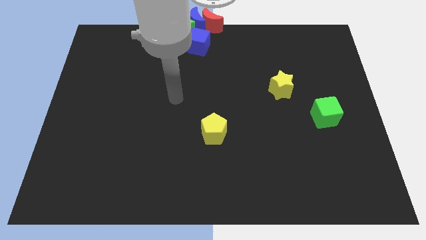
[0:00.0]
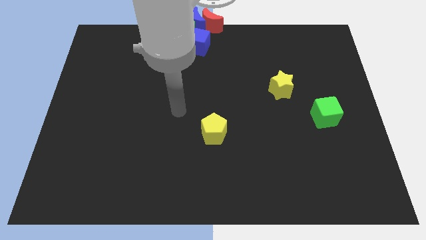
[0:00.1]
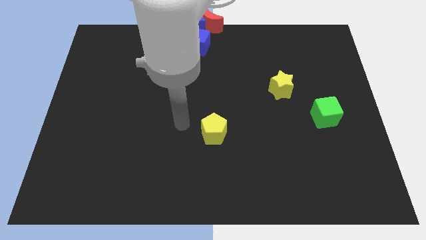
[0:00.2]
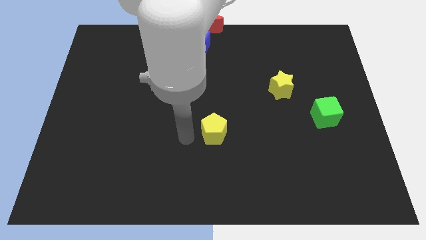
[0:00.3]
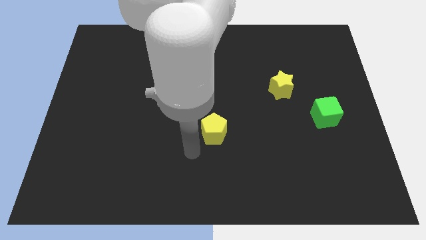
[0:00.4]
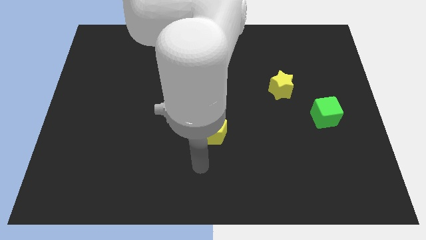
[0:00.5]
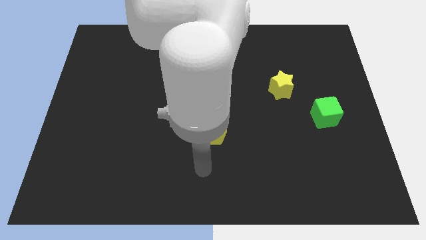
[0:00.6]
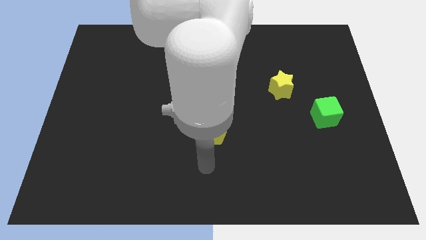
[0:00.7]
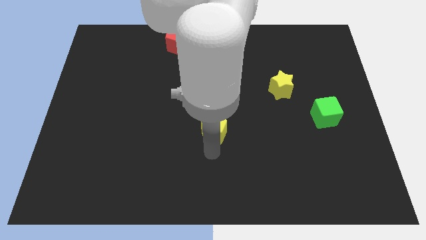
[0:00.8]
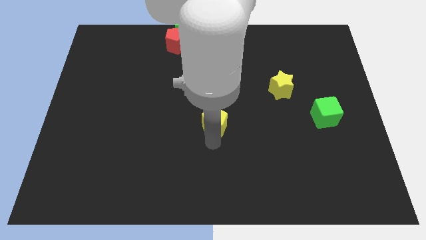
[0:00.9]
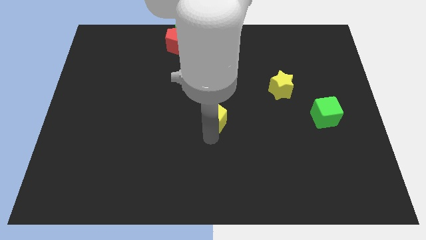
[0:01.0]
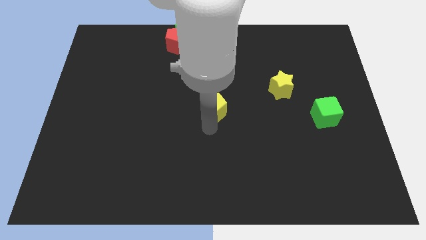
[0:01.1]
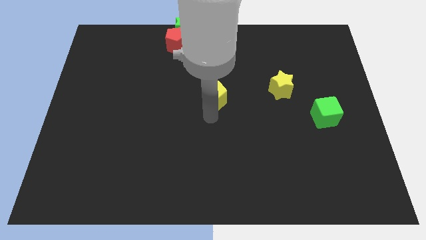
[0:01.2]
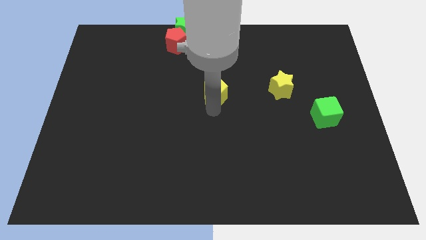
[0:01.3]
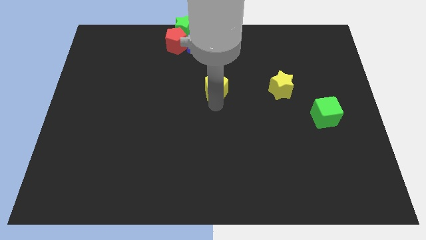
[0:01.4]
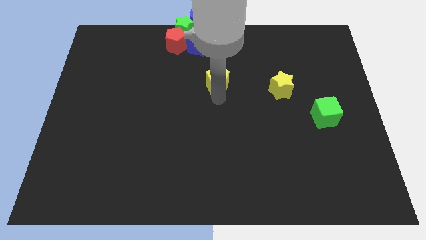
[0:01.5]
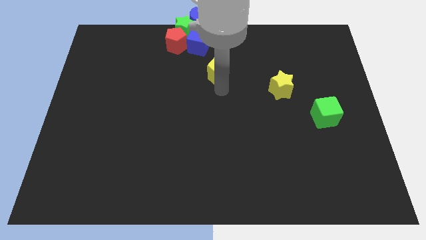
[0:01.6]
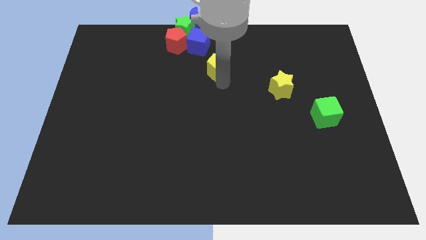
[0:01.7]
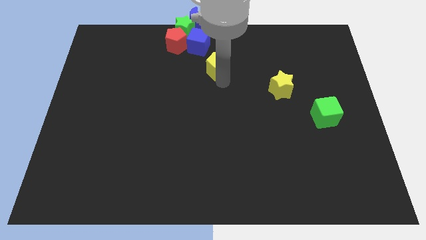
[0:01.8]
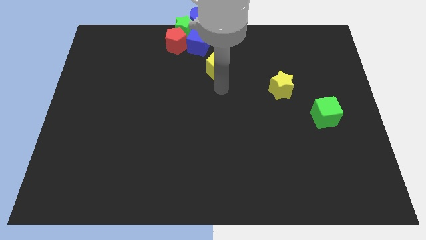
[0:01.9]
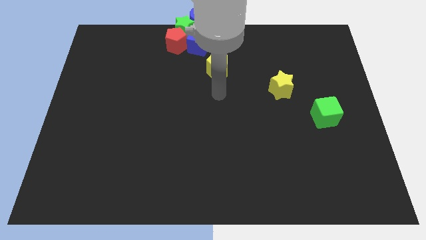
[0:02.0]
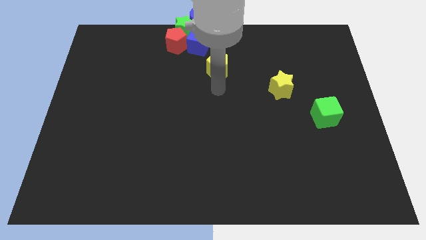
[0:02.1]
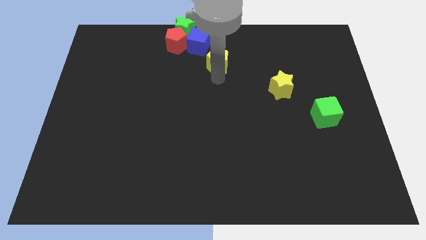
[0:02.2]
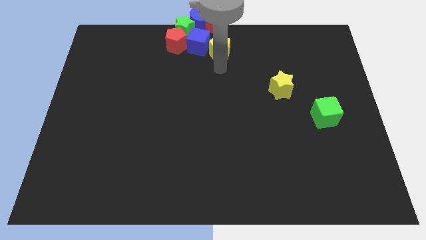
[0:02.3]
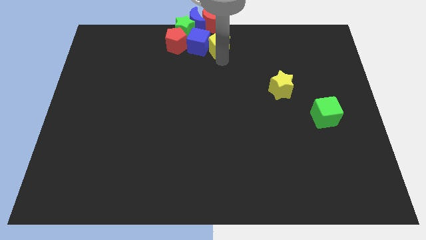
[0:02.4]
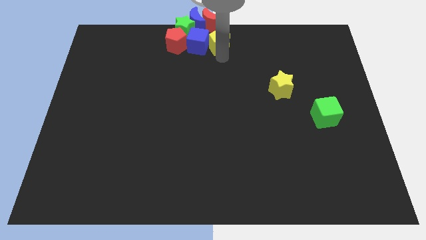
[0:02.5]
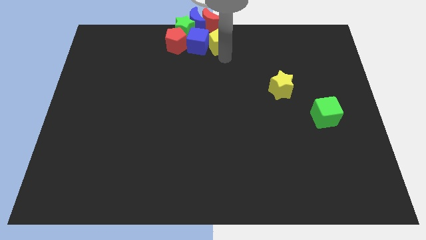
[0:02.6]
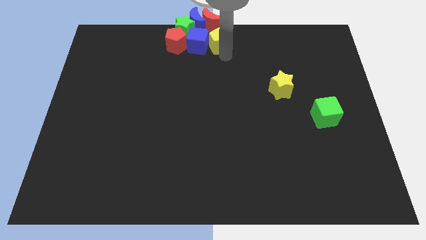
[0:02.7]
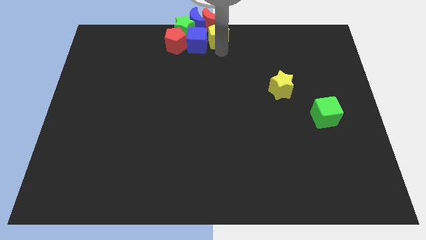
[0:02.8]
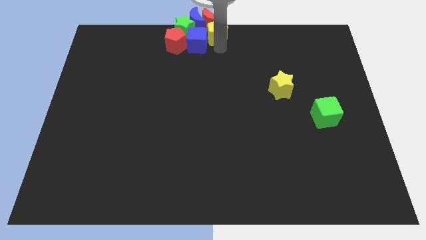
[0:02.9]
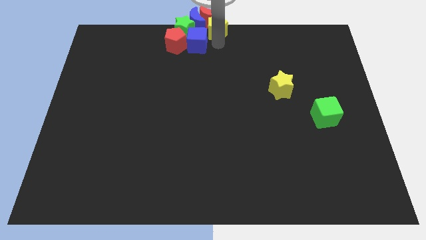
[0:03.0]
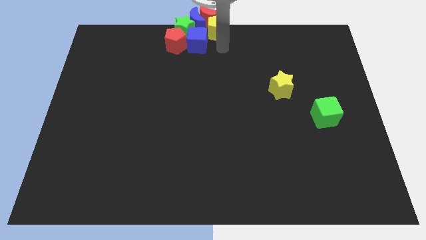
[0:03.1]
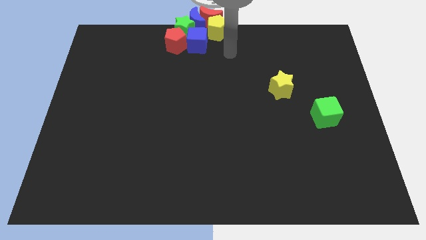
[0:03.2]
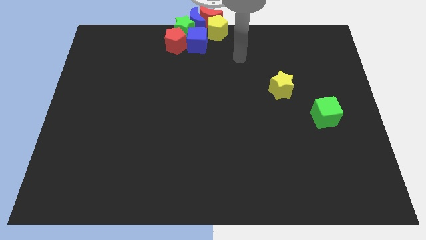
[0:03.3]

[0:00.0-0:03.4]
place yellow pentagon towards the top center

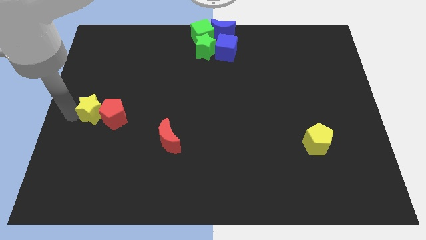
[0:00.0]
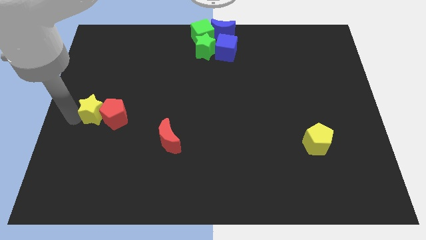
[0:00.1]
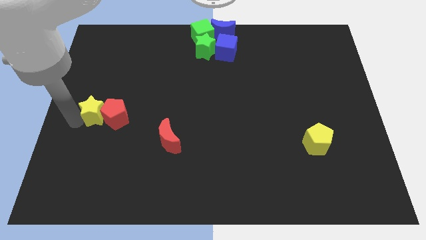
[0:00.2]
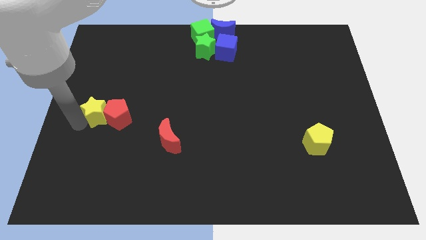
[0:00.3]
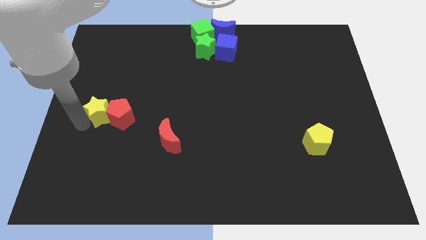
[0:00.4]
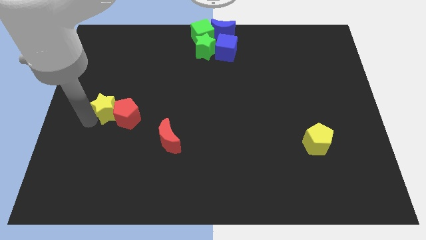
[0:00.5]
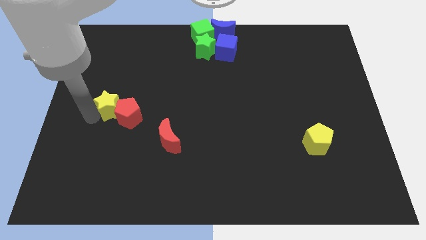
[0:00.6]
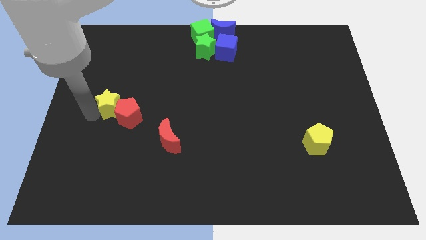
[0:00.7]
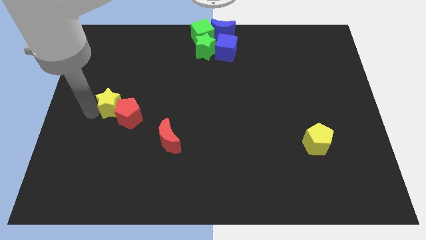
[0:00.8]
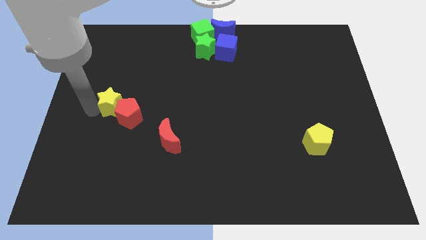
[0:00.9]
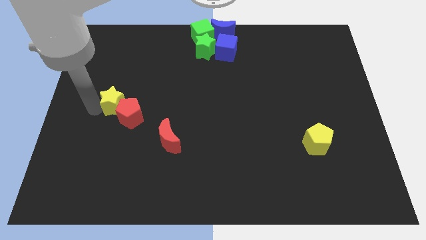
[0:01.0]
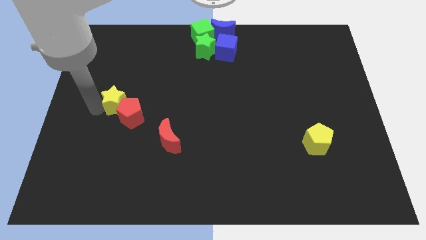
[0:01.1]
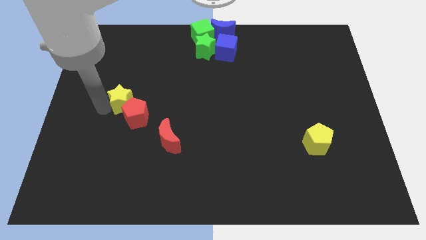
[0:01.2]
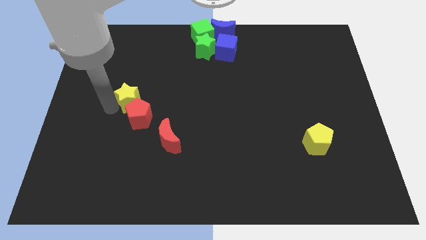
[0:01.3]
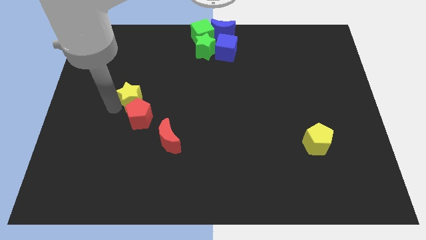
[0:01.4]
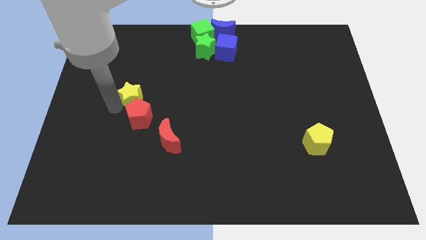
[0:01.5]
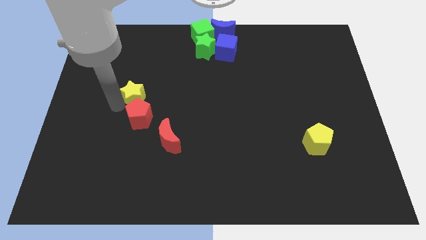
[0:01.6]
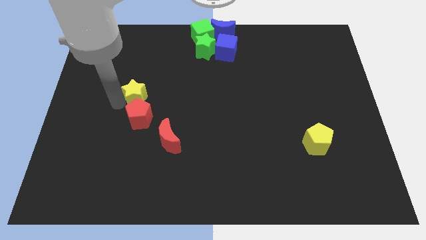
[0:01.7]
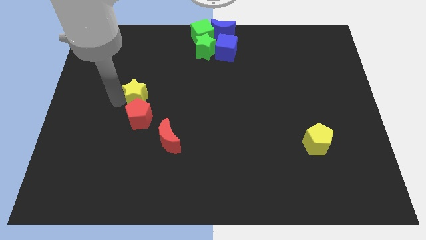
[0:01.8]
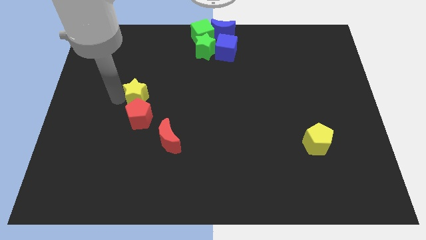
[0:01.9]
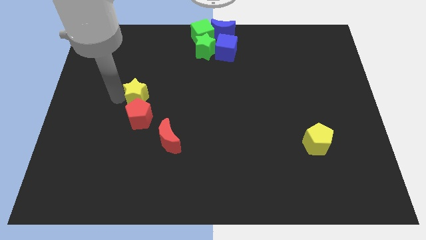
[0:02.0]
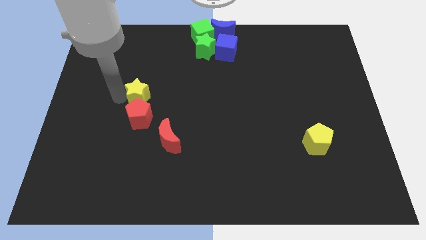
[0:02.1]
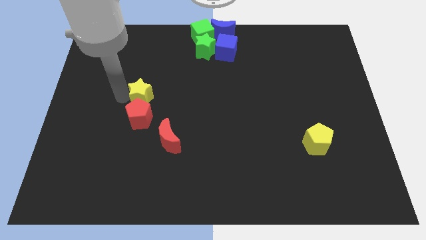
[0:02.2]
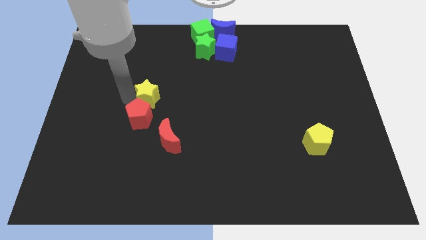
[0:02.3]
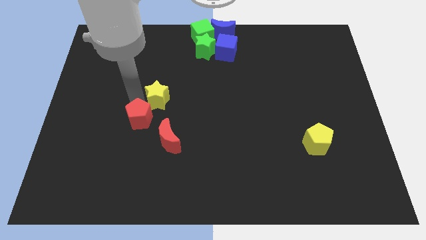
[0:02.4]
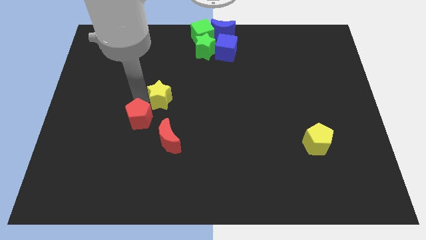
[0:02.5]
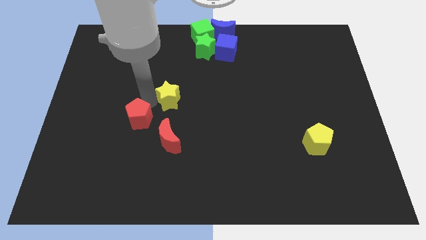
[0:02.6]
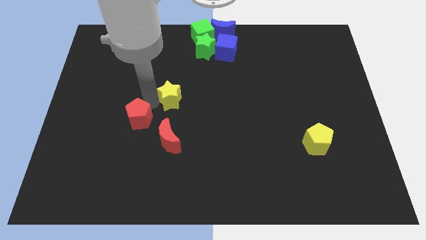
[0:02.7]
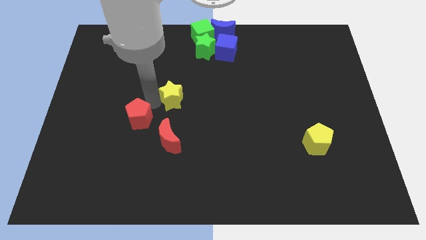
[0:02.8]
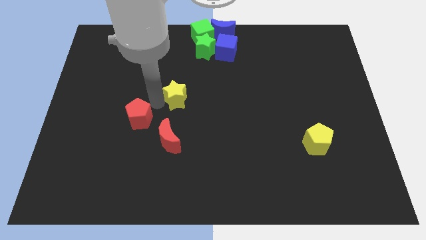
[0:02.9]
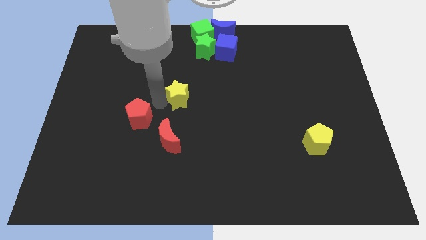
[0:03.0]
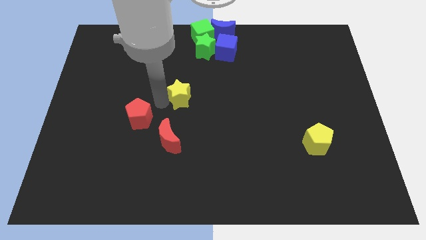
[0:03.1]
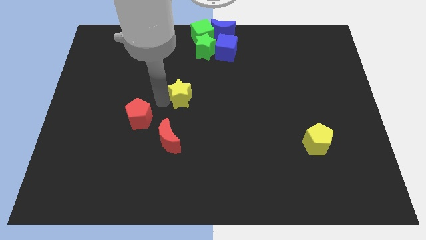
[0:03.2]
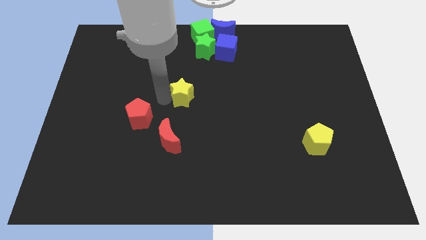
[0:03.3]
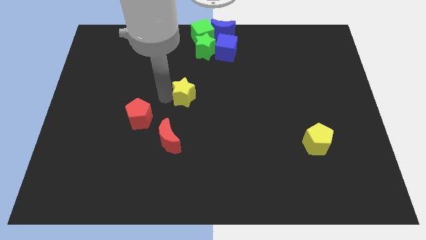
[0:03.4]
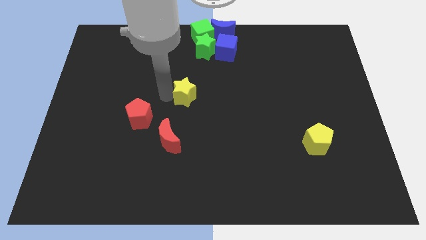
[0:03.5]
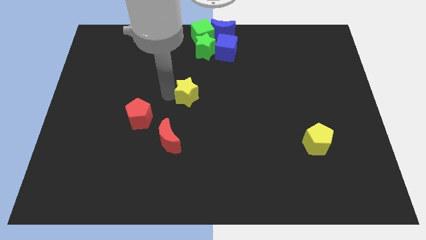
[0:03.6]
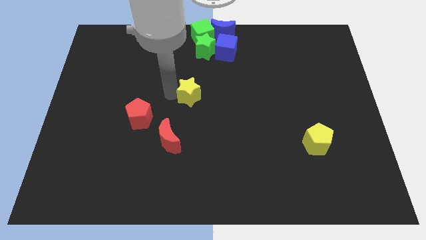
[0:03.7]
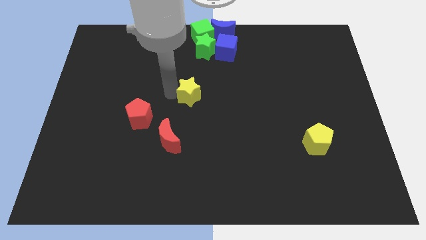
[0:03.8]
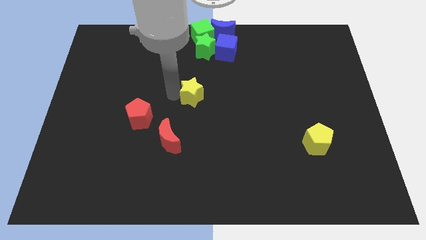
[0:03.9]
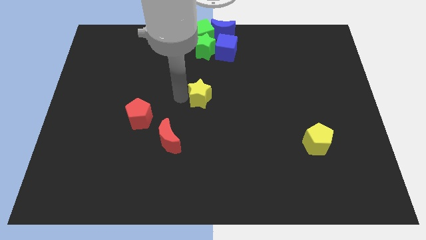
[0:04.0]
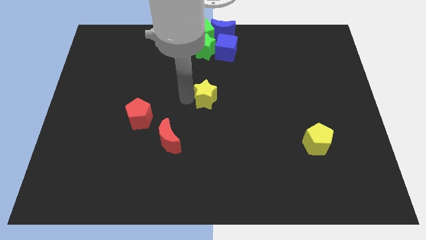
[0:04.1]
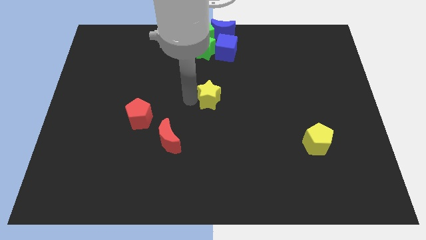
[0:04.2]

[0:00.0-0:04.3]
move the yellow star towards the center of the board

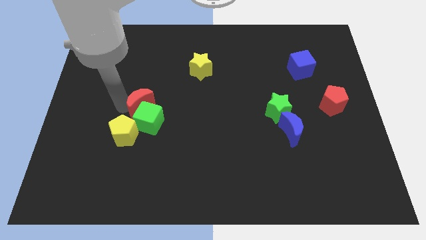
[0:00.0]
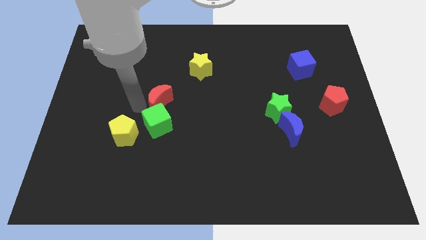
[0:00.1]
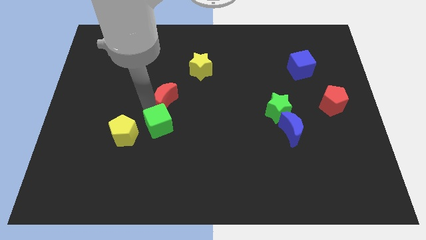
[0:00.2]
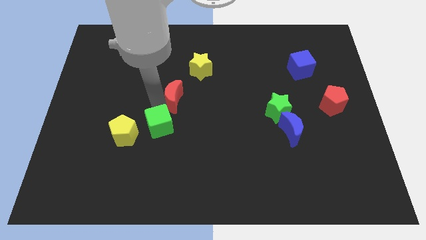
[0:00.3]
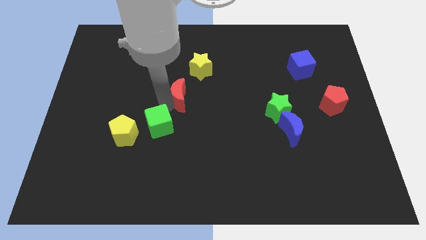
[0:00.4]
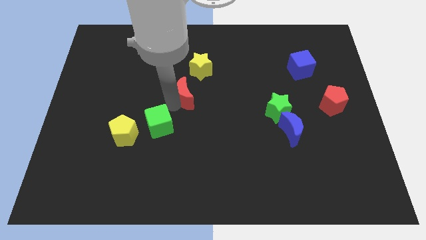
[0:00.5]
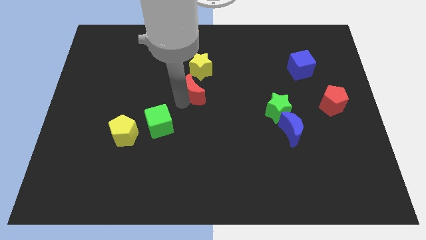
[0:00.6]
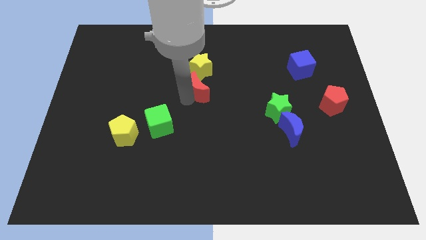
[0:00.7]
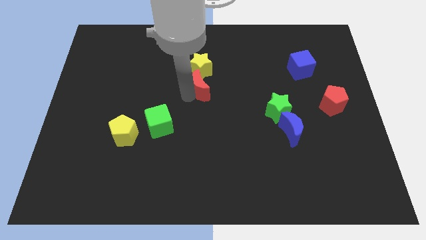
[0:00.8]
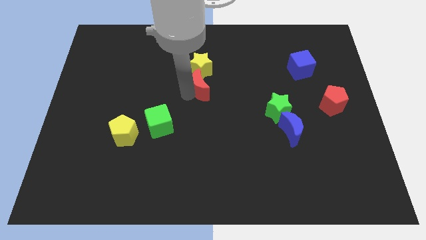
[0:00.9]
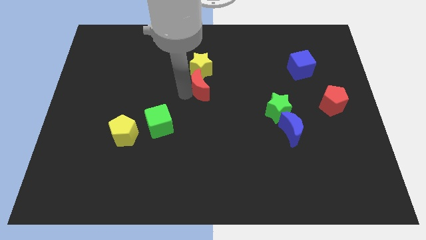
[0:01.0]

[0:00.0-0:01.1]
separate the red moon and green cube

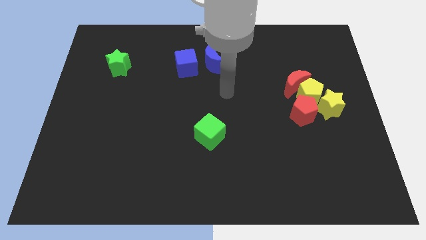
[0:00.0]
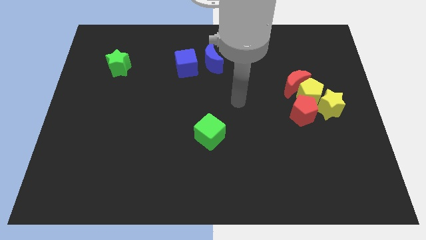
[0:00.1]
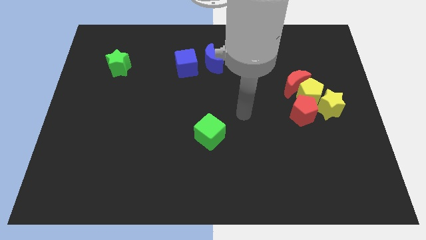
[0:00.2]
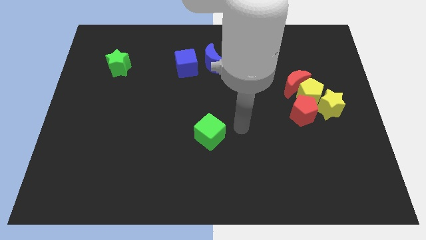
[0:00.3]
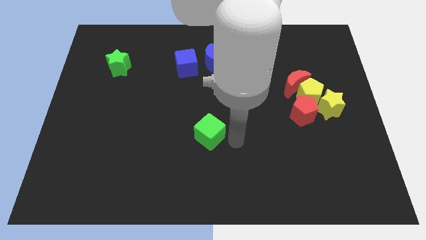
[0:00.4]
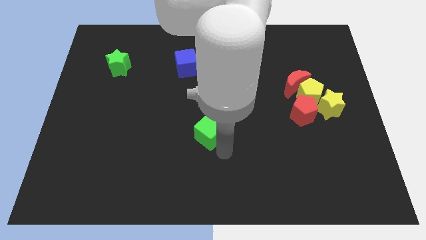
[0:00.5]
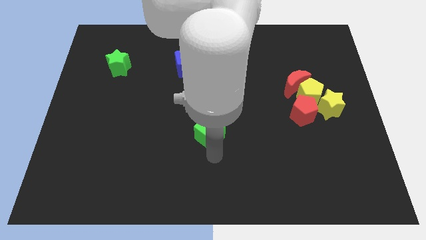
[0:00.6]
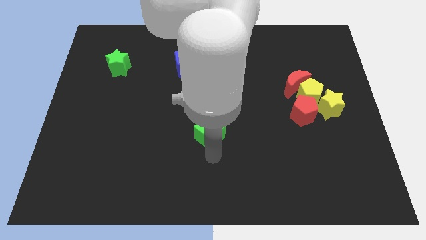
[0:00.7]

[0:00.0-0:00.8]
place your arm below green cube
